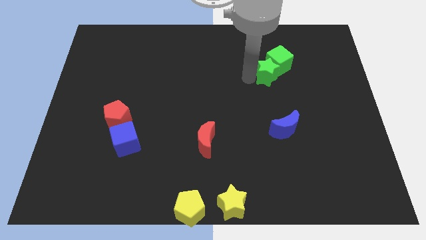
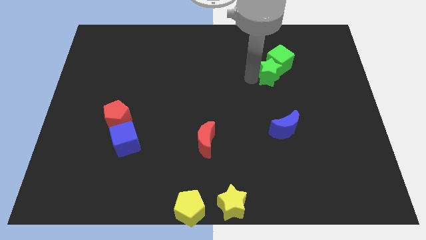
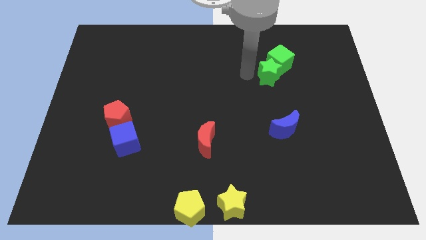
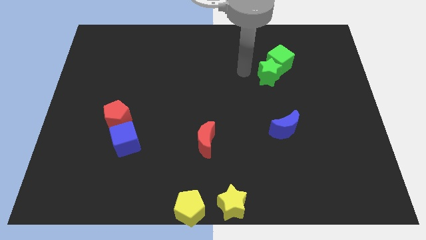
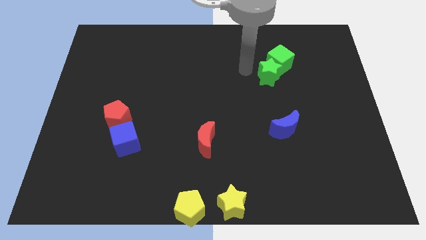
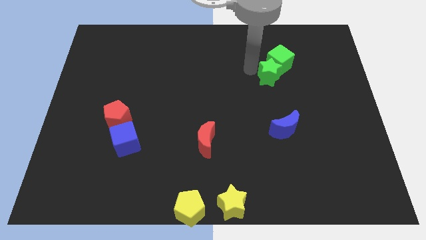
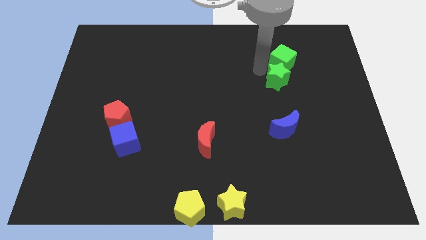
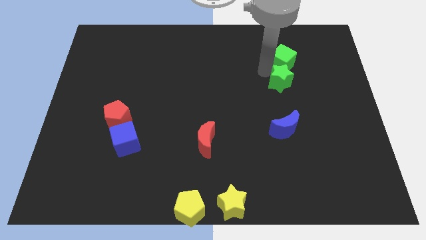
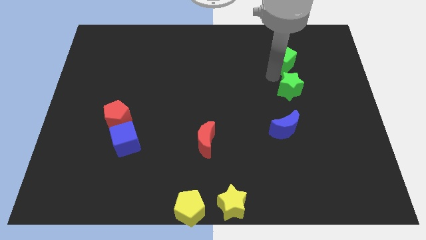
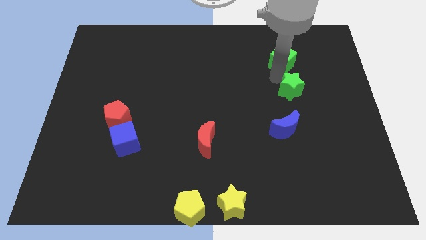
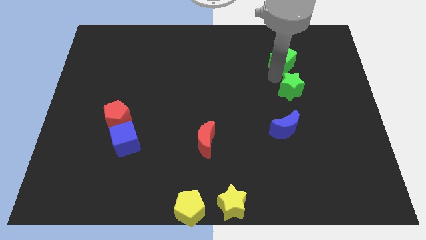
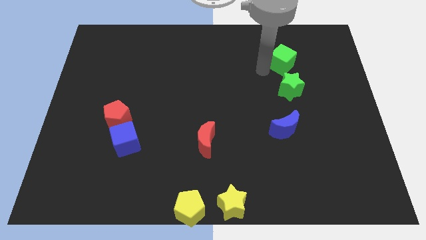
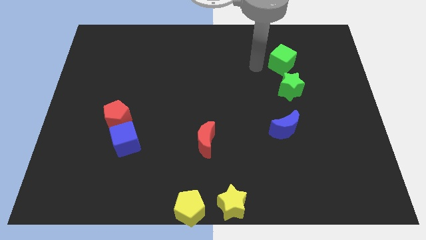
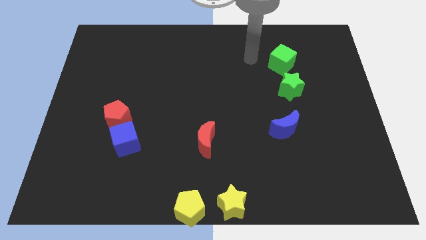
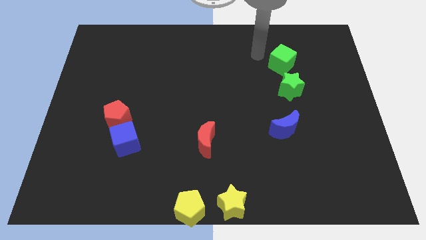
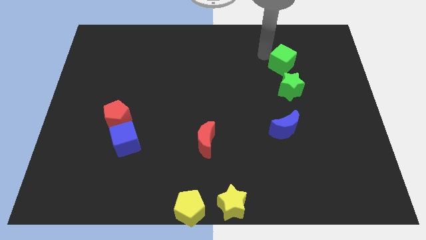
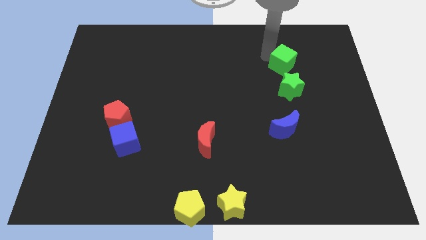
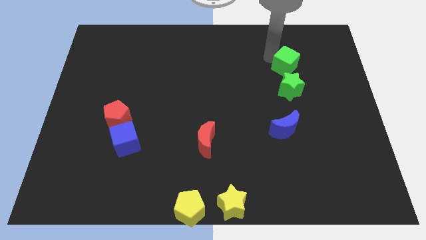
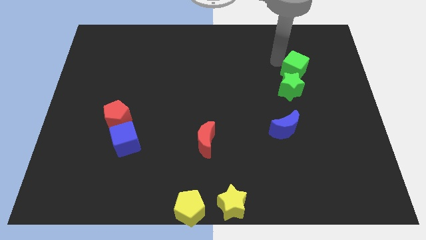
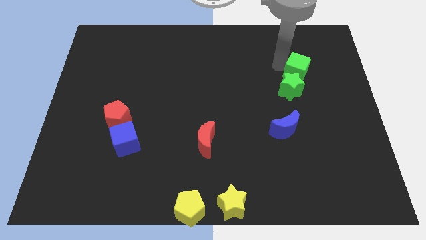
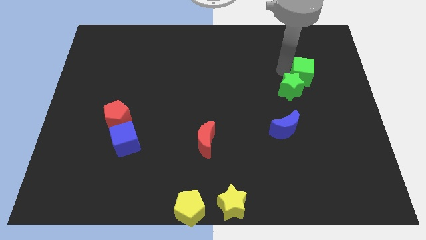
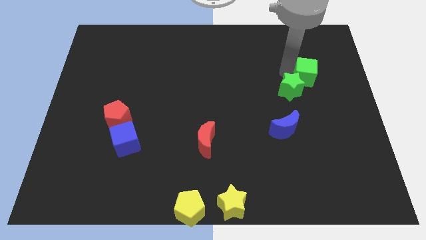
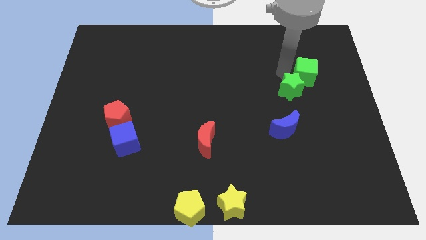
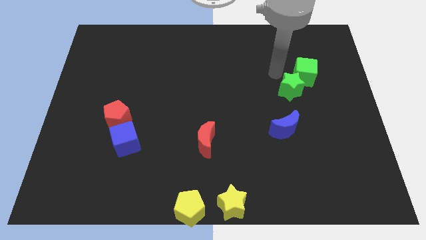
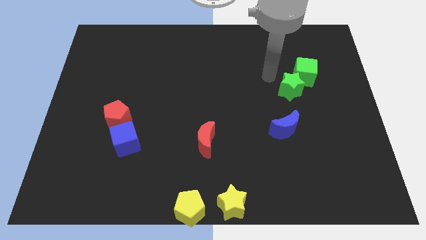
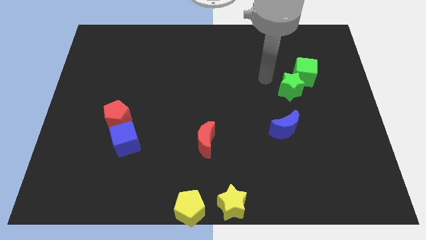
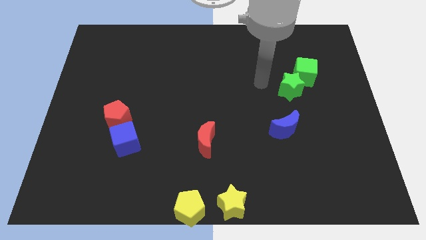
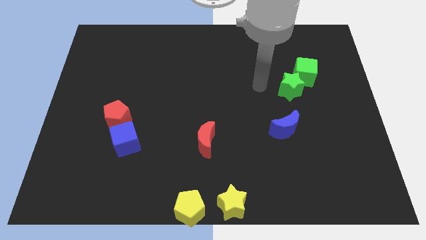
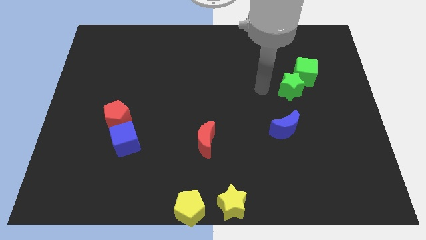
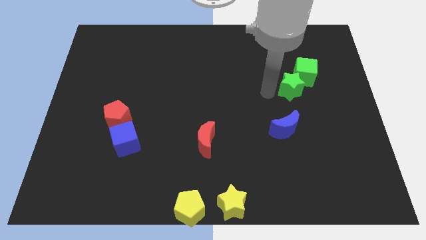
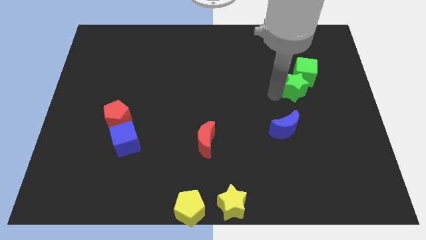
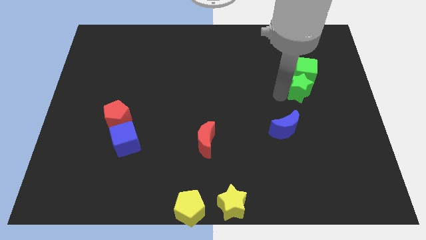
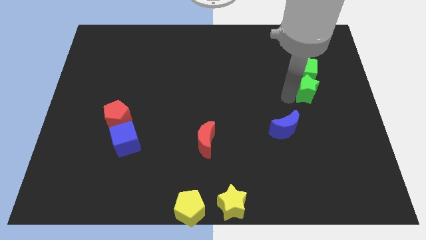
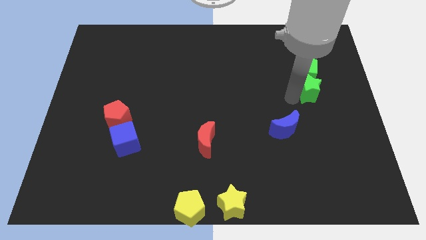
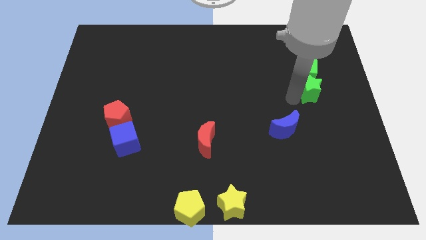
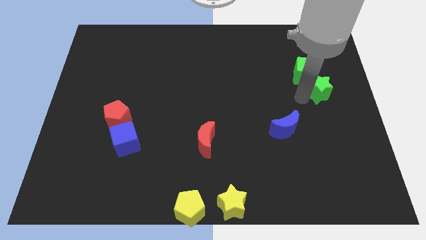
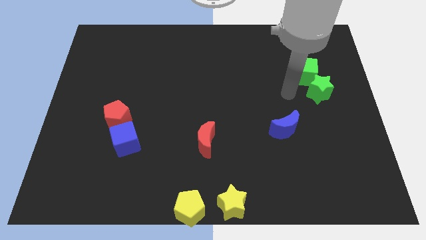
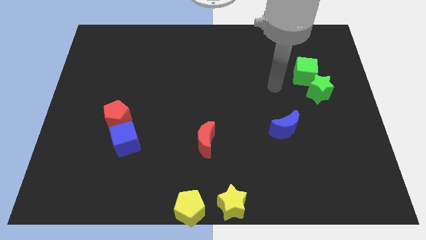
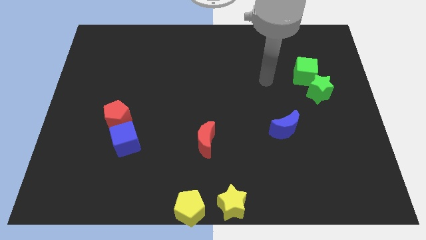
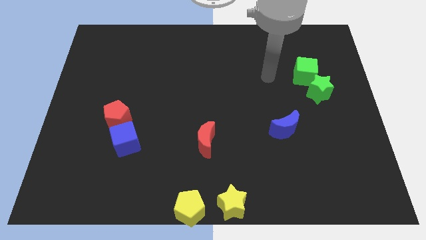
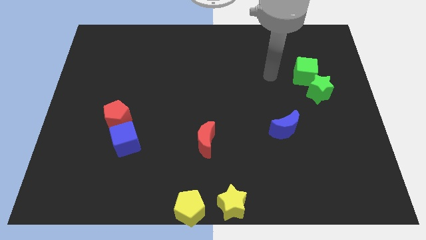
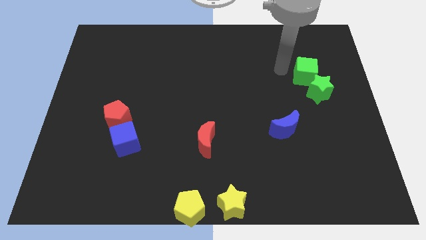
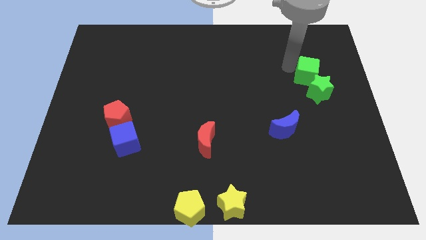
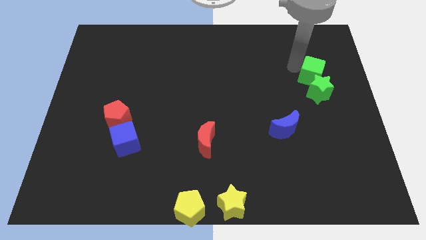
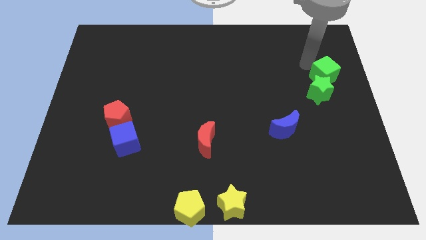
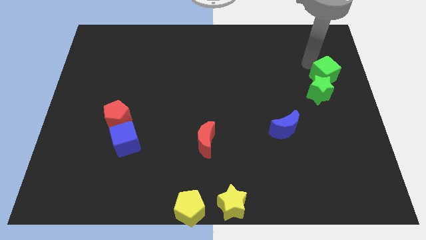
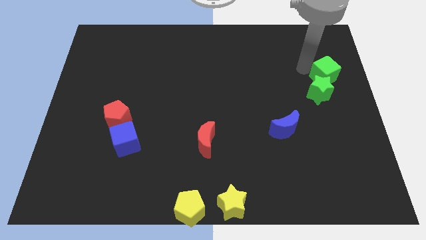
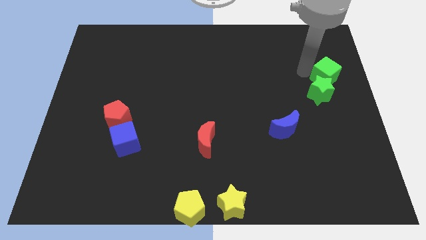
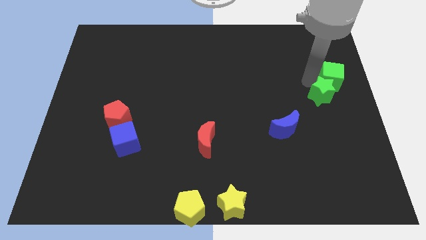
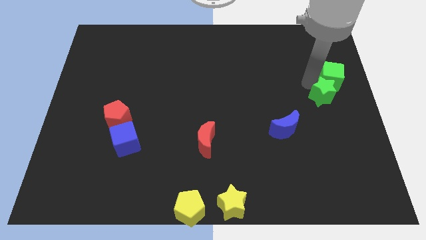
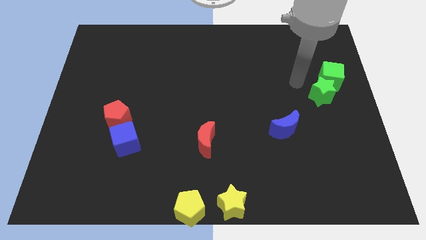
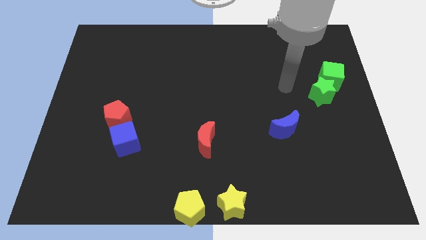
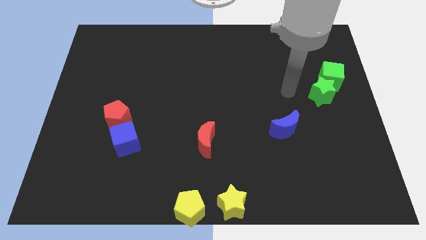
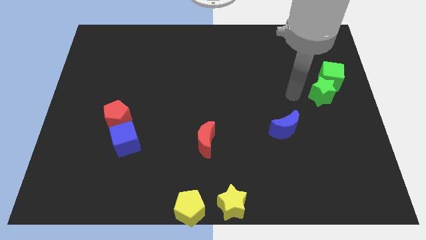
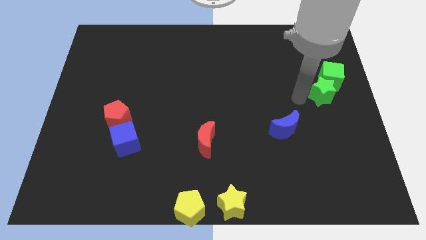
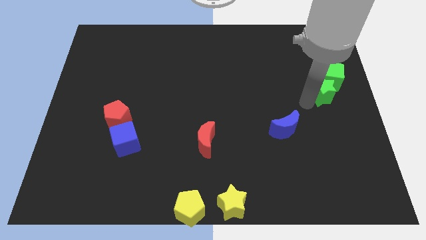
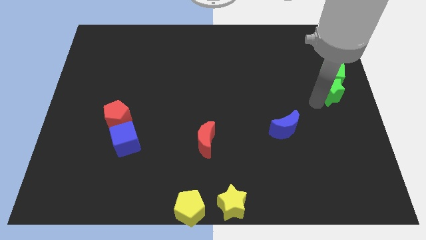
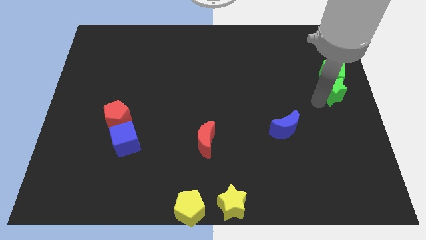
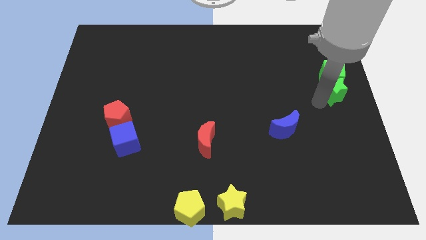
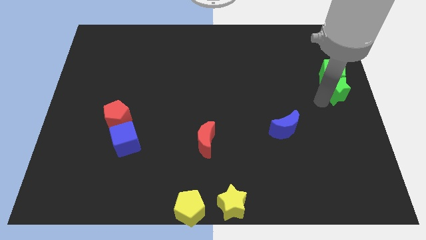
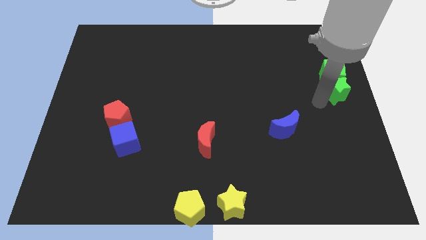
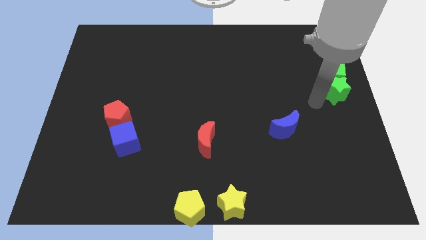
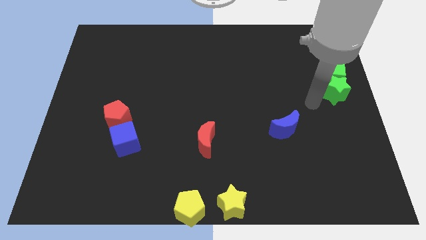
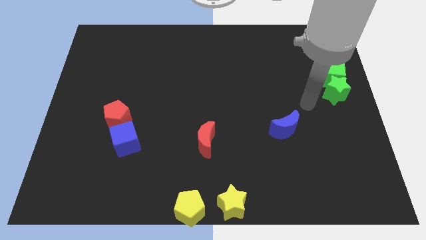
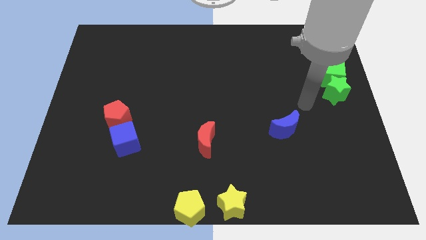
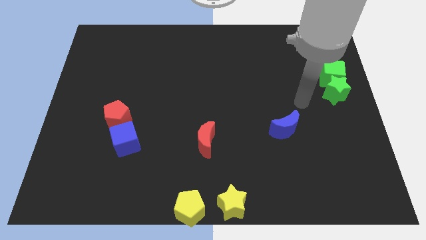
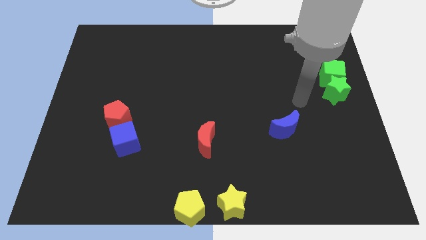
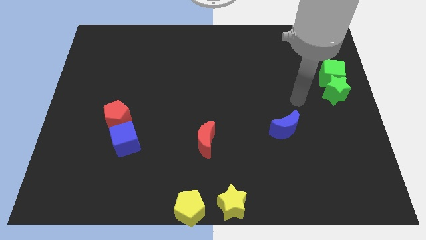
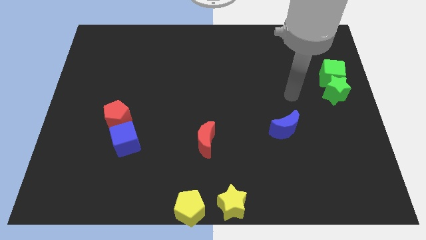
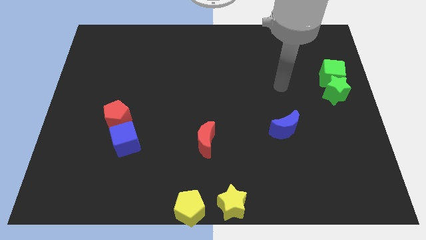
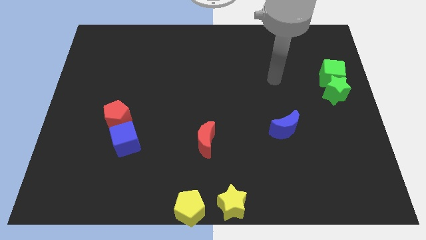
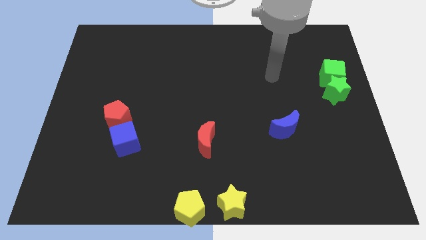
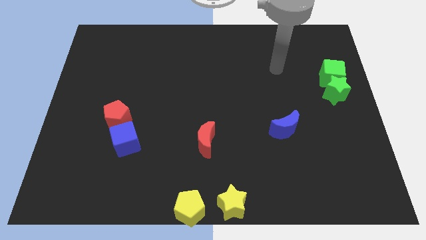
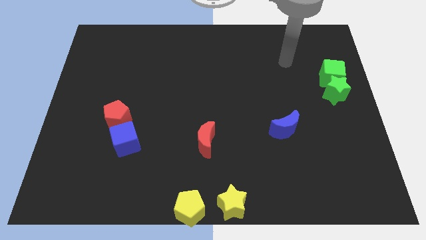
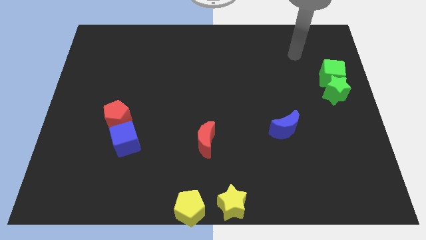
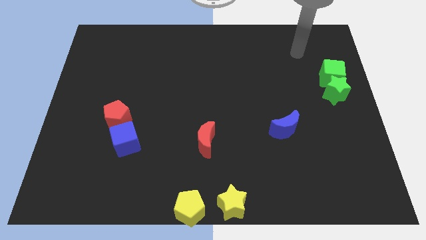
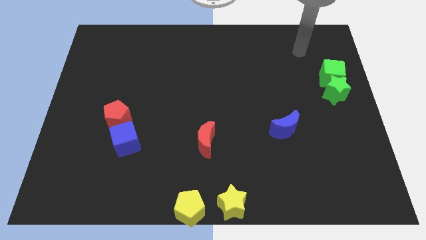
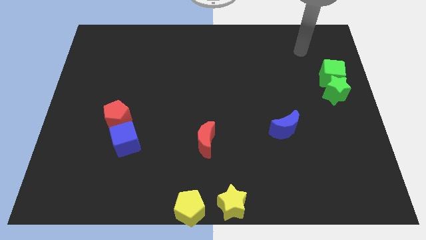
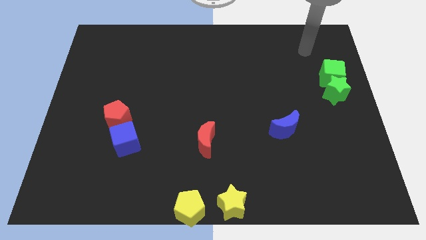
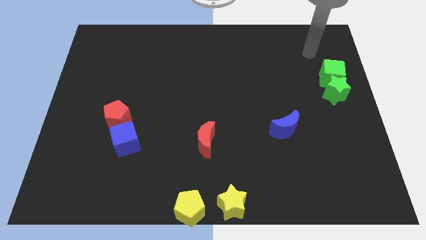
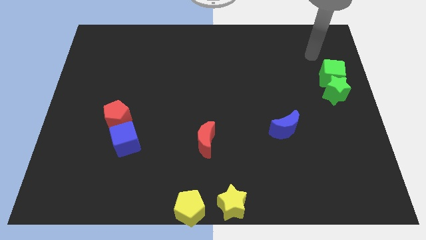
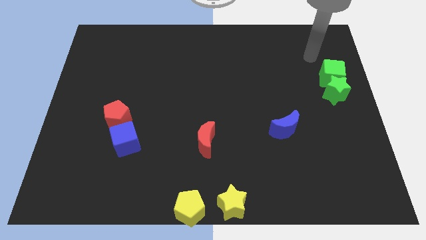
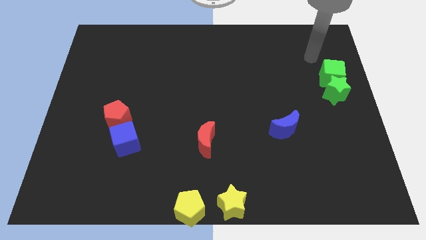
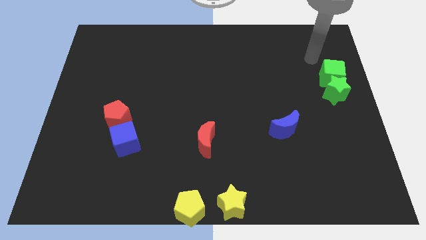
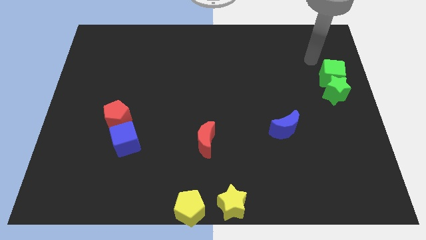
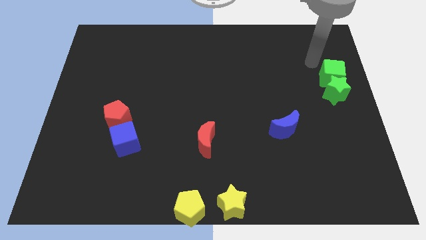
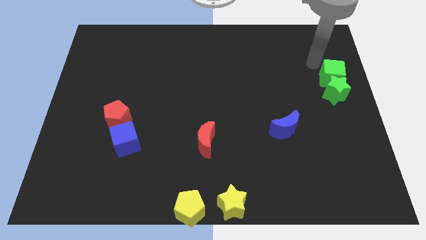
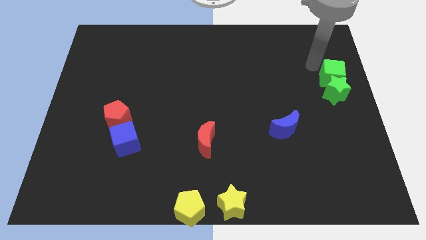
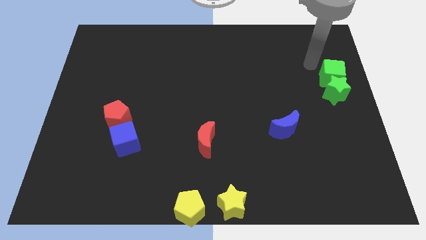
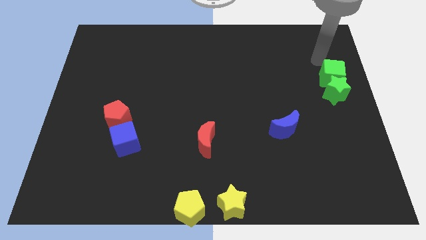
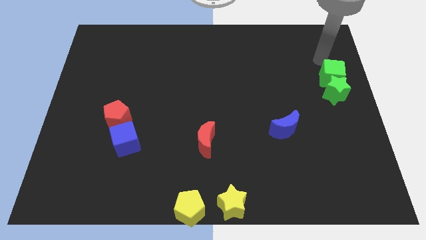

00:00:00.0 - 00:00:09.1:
move the green cube and the green star towards the right center of the board
